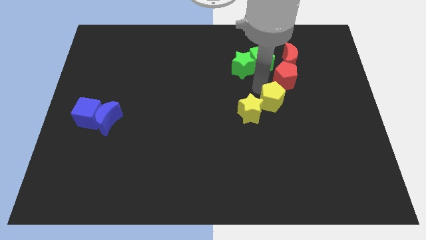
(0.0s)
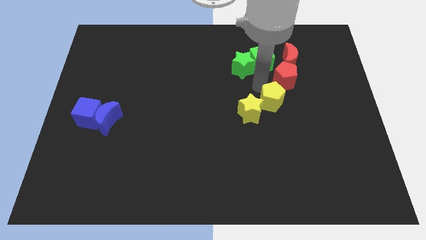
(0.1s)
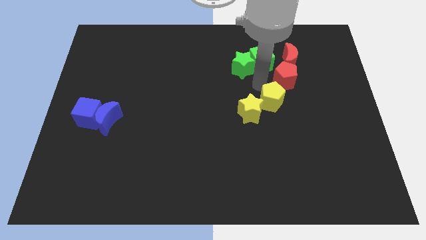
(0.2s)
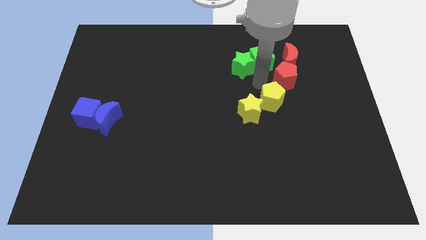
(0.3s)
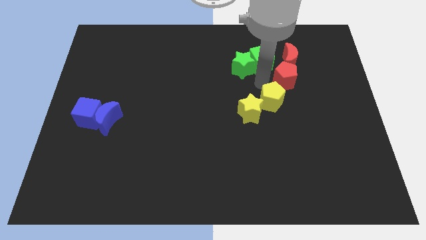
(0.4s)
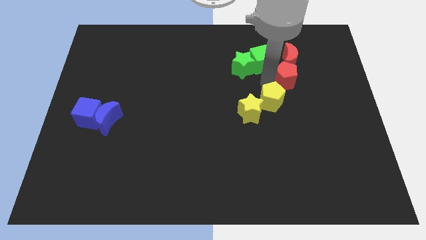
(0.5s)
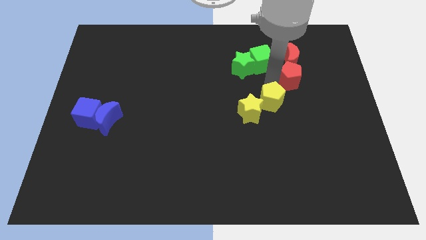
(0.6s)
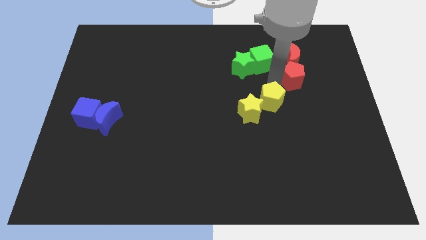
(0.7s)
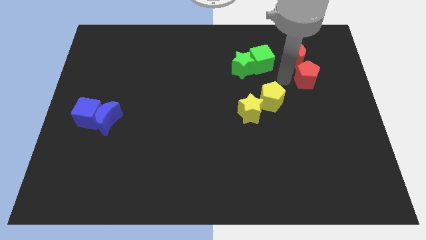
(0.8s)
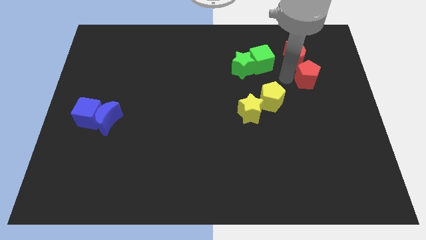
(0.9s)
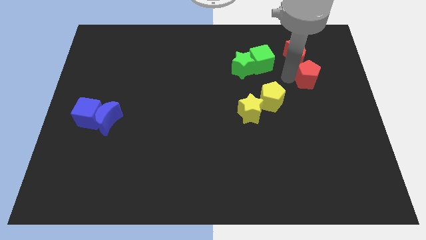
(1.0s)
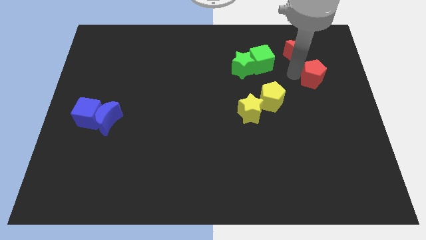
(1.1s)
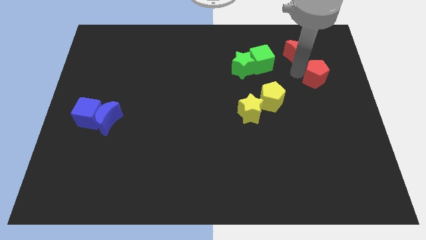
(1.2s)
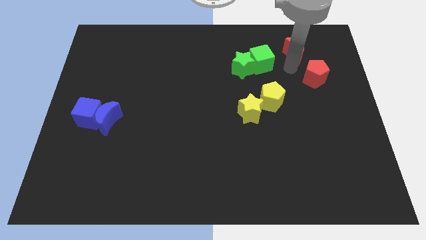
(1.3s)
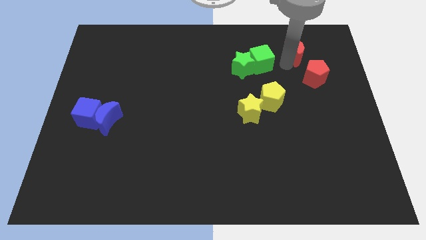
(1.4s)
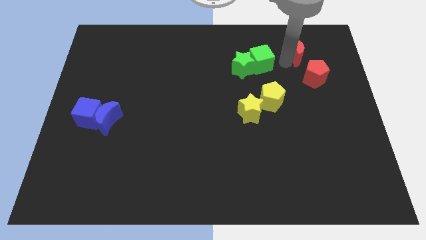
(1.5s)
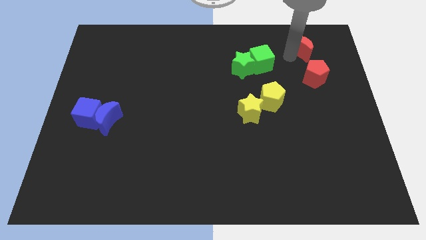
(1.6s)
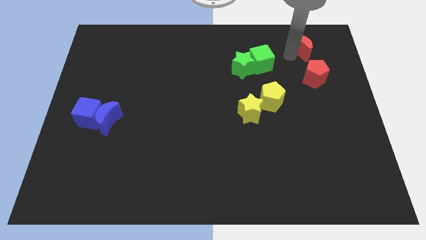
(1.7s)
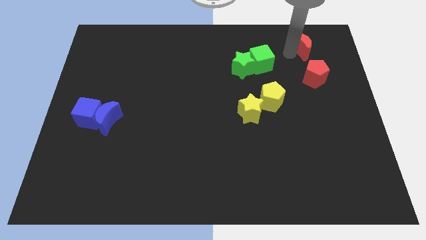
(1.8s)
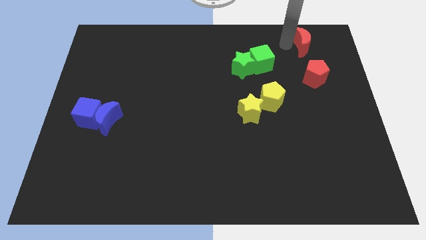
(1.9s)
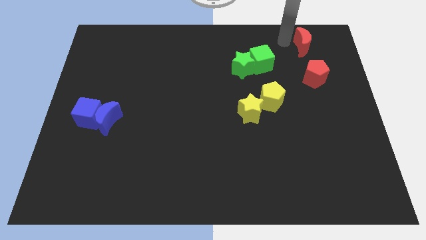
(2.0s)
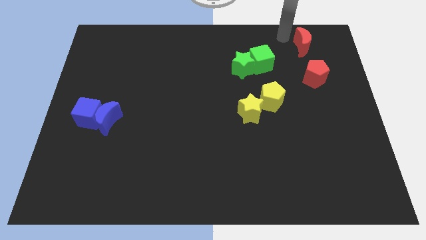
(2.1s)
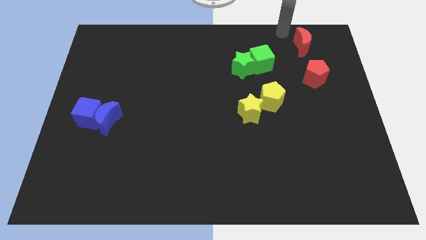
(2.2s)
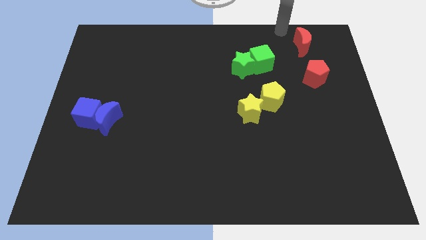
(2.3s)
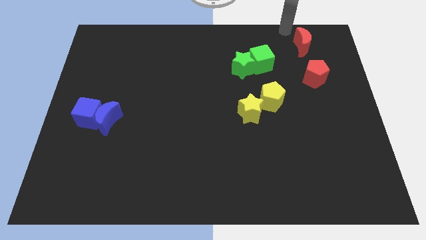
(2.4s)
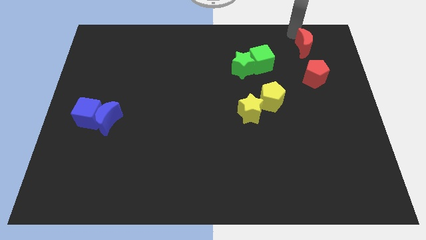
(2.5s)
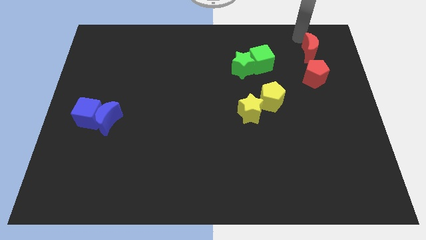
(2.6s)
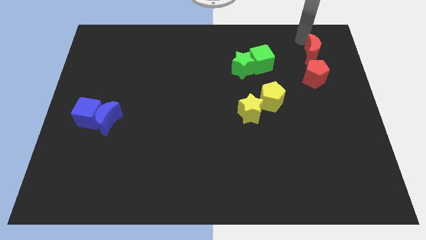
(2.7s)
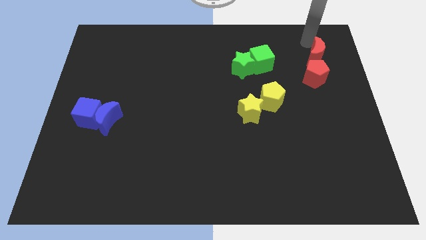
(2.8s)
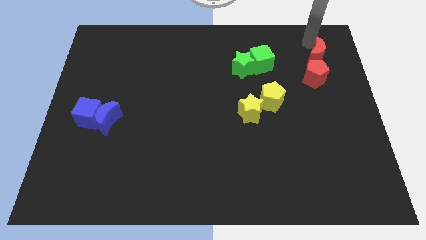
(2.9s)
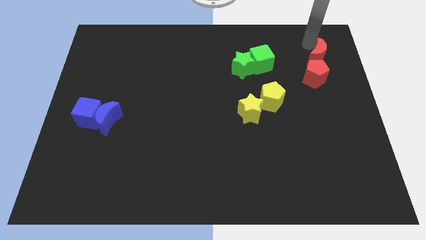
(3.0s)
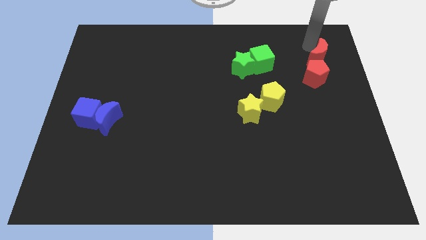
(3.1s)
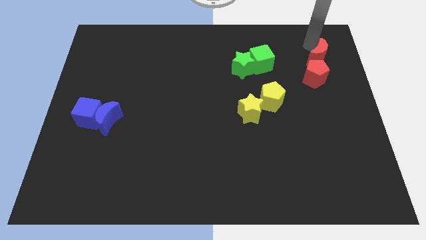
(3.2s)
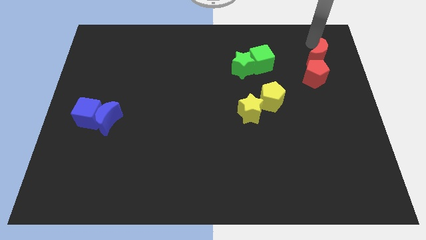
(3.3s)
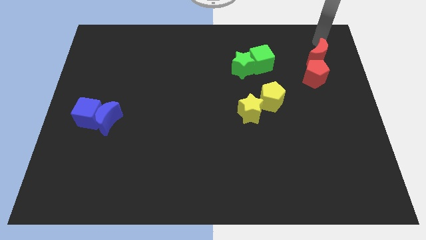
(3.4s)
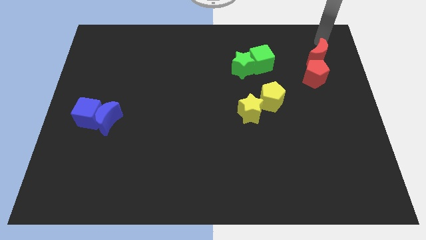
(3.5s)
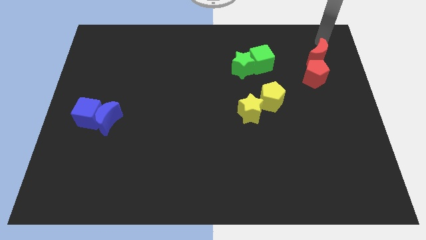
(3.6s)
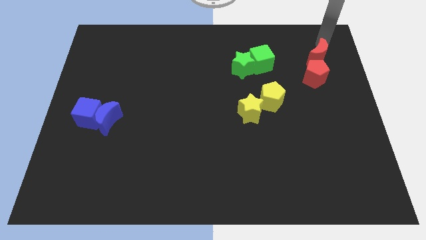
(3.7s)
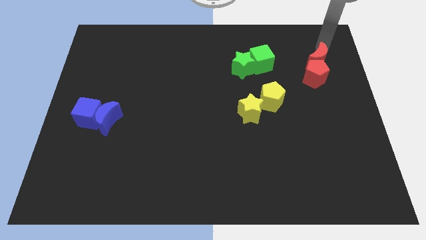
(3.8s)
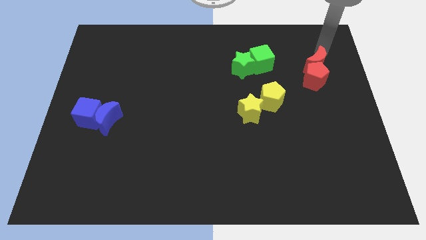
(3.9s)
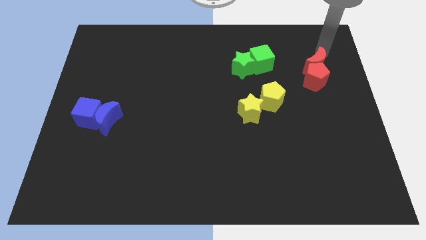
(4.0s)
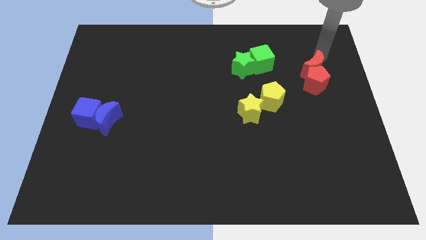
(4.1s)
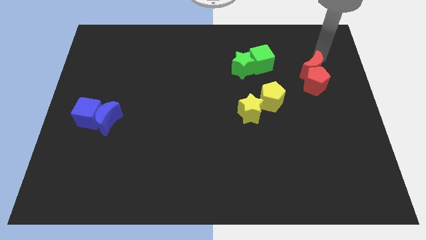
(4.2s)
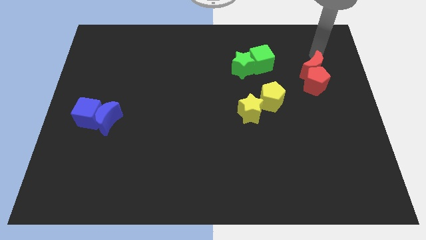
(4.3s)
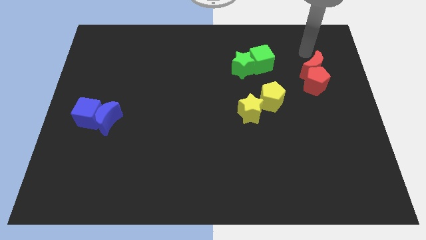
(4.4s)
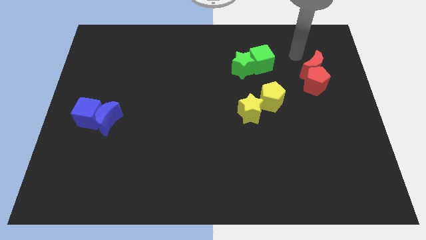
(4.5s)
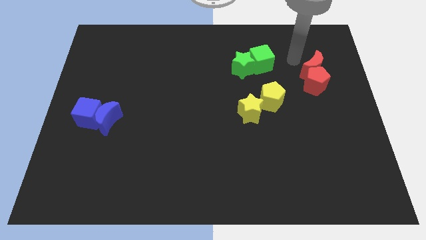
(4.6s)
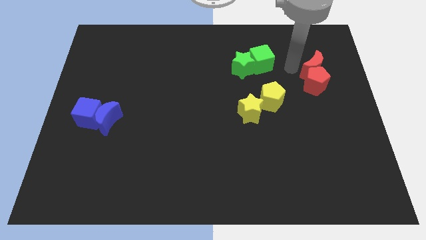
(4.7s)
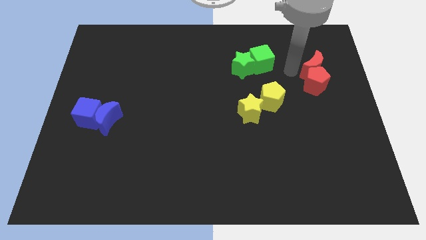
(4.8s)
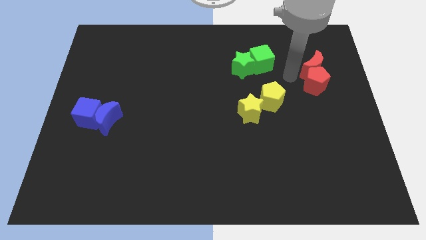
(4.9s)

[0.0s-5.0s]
push the red crescent into the red pentagon

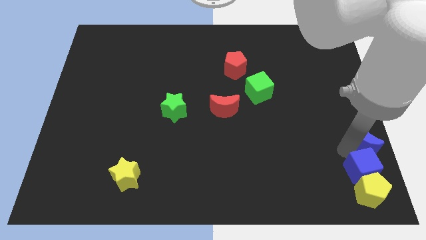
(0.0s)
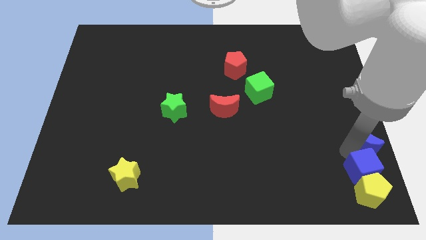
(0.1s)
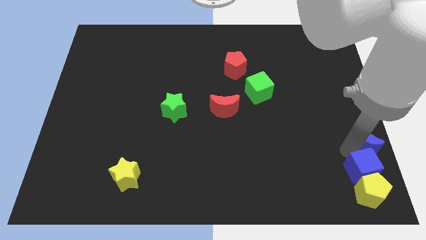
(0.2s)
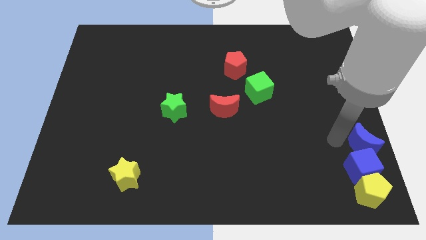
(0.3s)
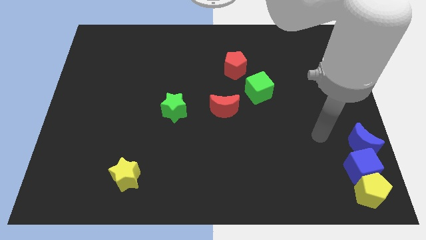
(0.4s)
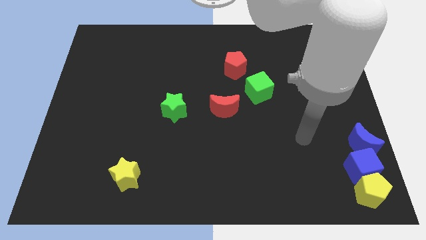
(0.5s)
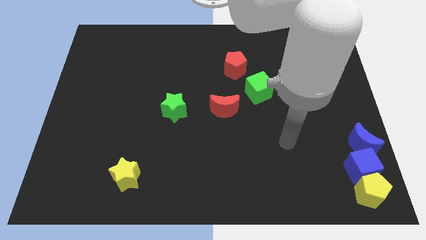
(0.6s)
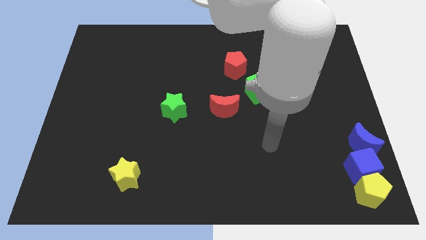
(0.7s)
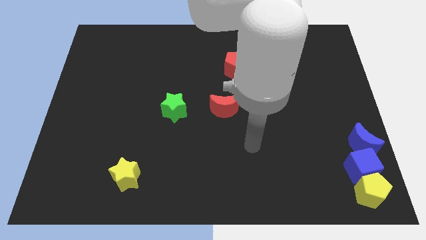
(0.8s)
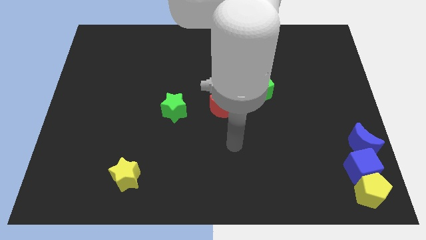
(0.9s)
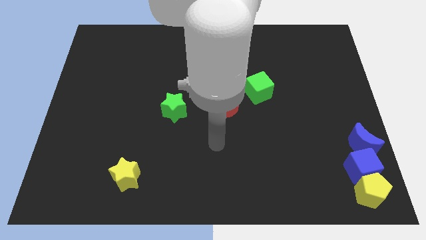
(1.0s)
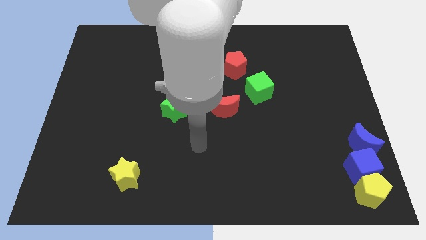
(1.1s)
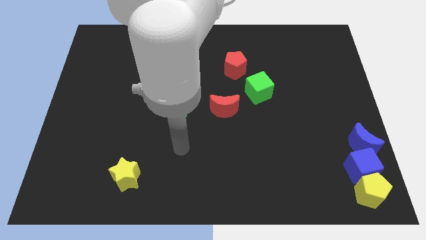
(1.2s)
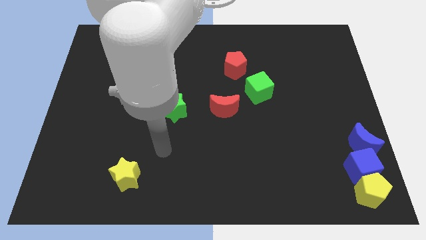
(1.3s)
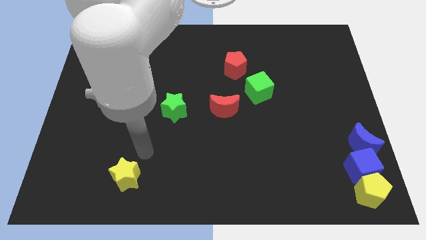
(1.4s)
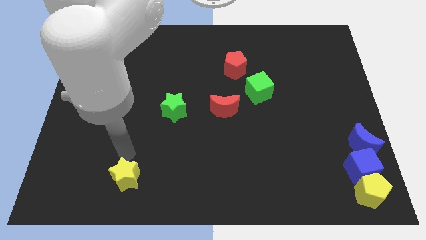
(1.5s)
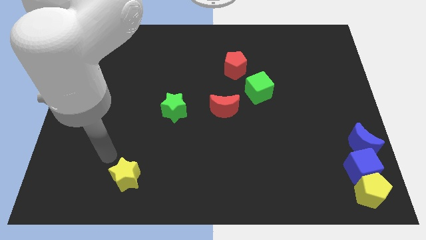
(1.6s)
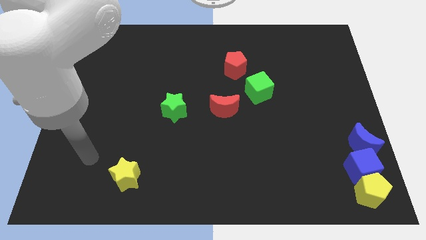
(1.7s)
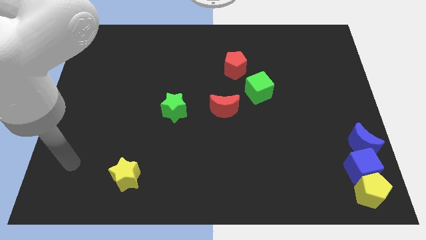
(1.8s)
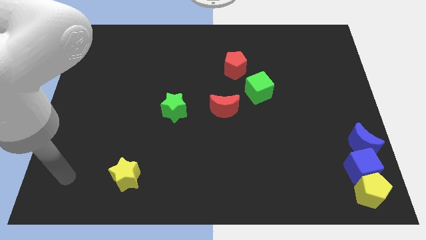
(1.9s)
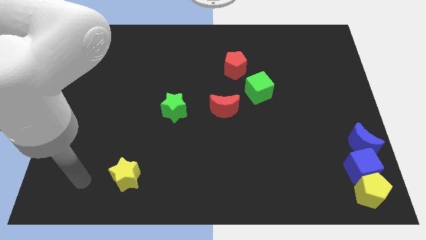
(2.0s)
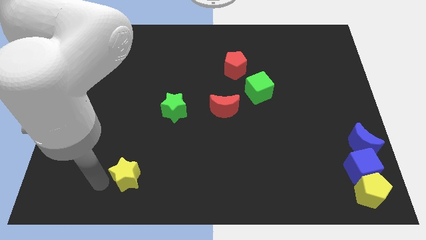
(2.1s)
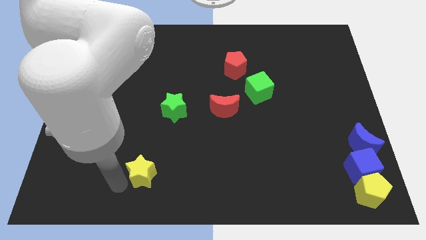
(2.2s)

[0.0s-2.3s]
place the arm to the left of the yellow star

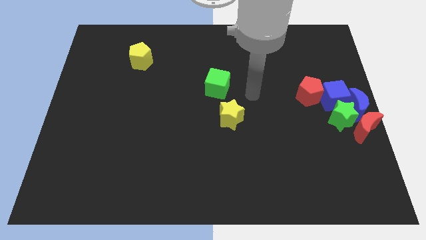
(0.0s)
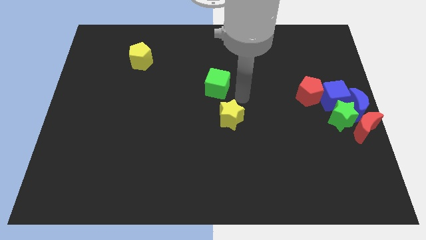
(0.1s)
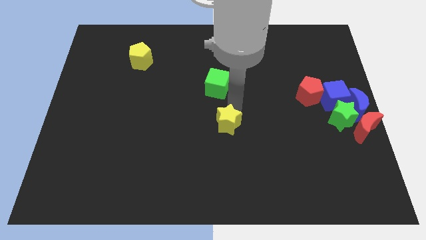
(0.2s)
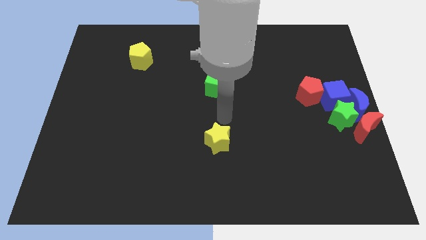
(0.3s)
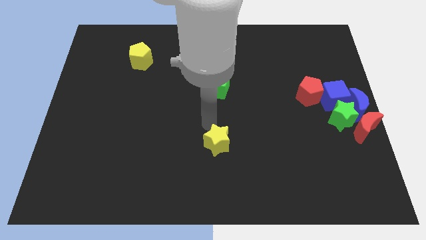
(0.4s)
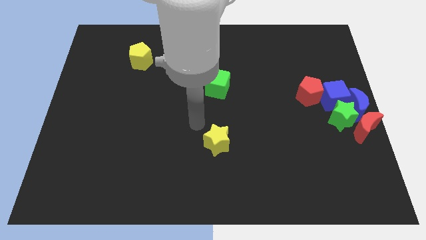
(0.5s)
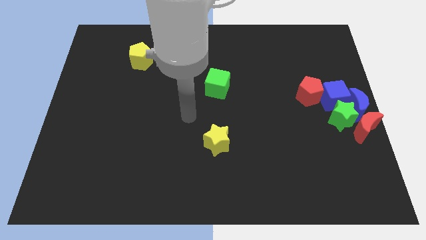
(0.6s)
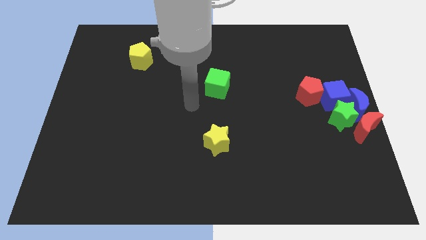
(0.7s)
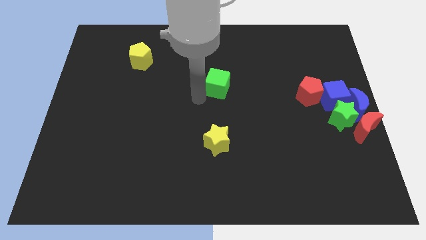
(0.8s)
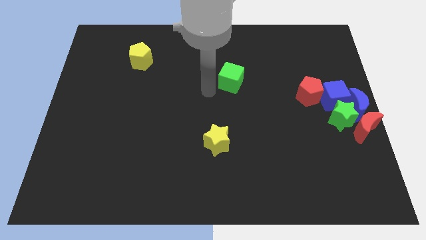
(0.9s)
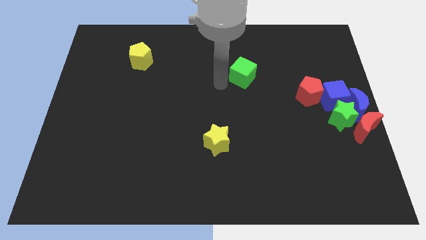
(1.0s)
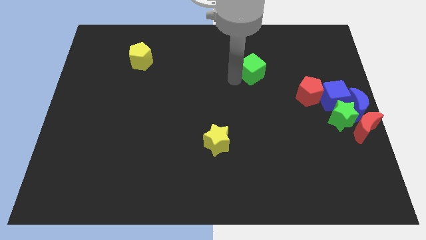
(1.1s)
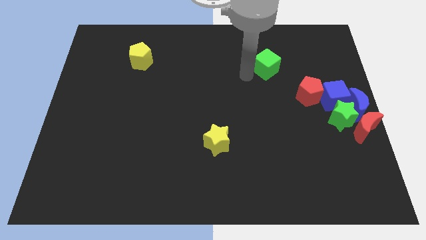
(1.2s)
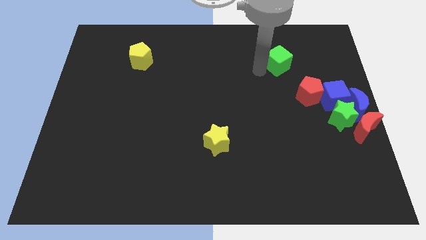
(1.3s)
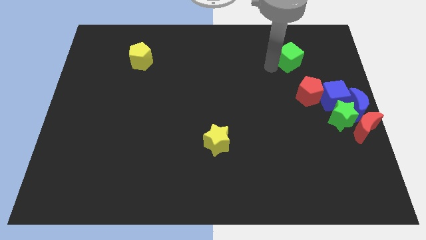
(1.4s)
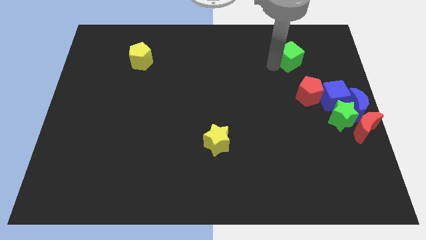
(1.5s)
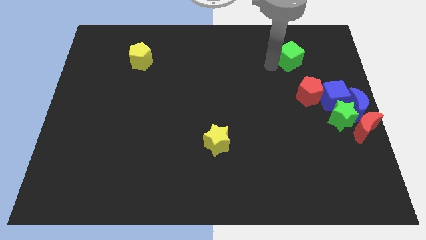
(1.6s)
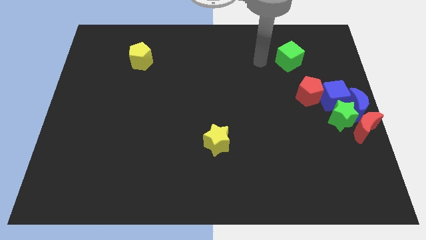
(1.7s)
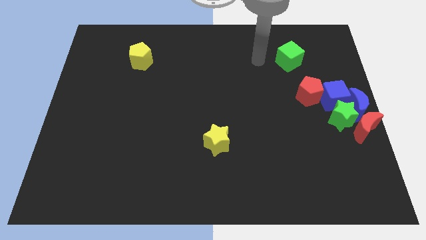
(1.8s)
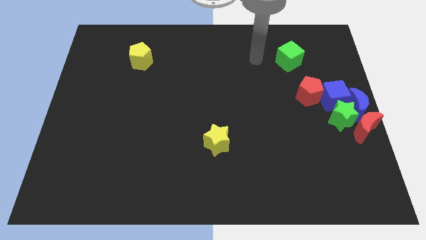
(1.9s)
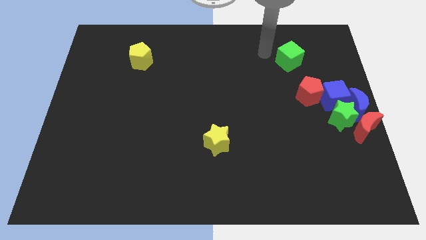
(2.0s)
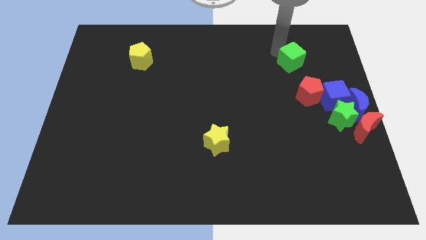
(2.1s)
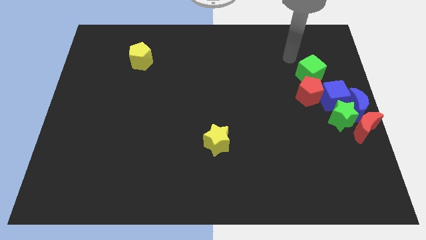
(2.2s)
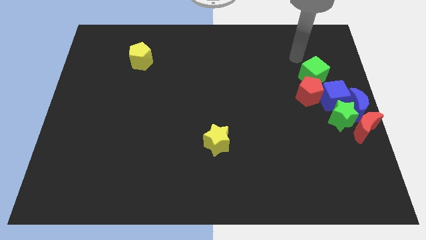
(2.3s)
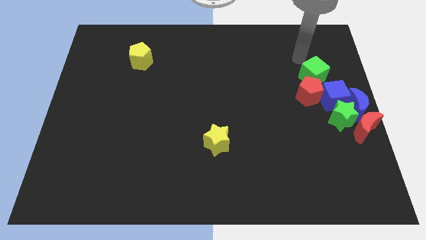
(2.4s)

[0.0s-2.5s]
place green cube to the top of the red pentagon
